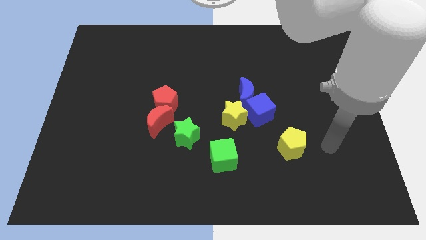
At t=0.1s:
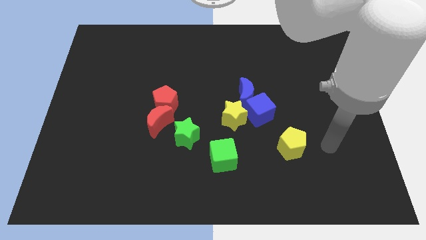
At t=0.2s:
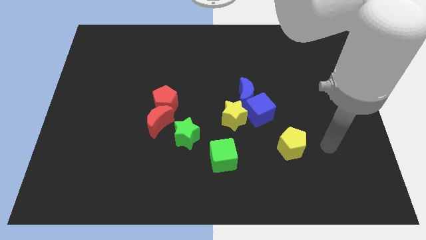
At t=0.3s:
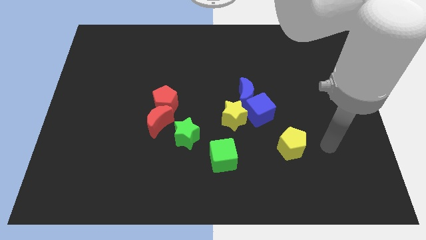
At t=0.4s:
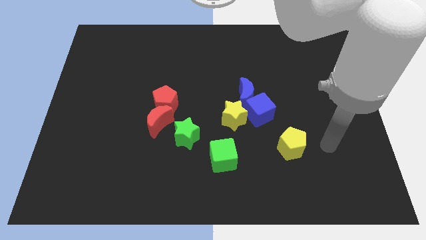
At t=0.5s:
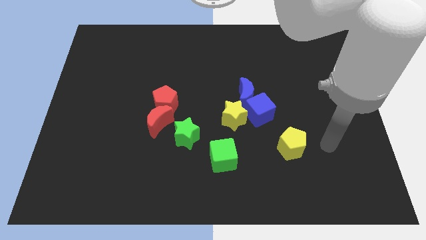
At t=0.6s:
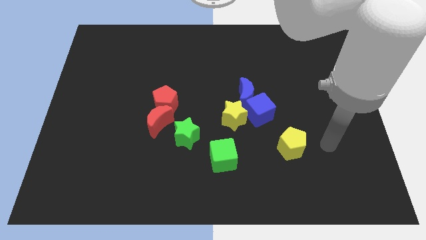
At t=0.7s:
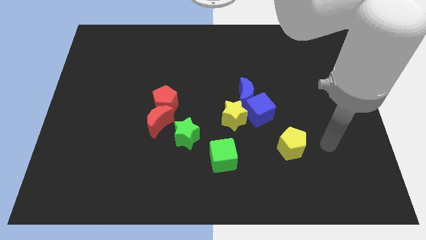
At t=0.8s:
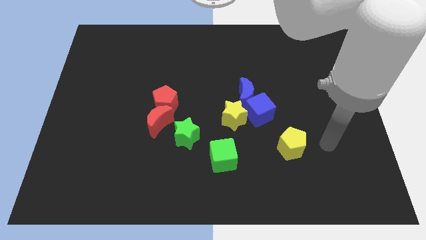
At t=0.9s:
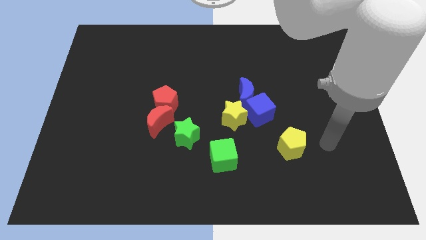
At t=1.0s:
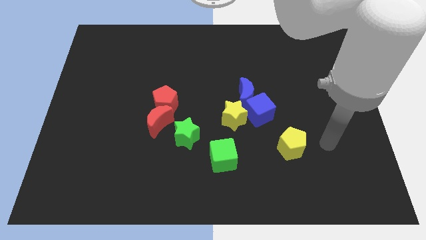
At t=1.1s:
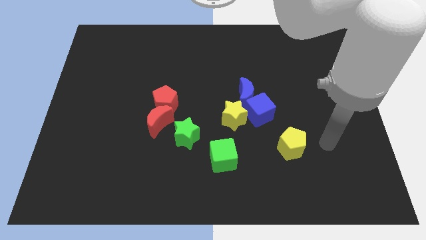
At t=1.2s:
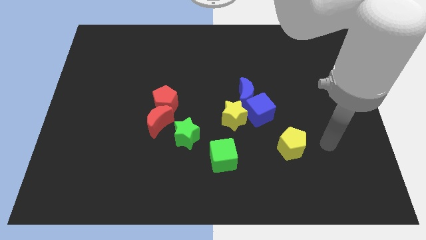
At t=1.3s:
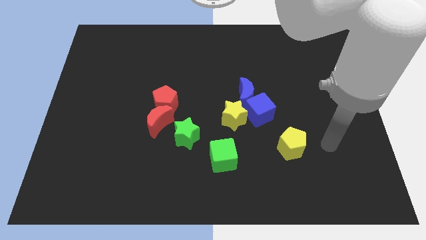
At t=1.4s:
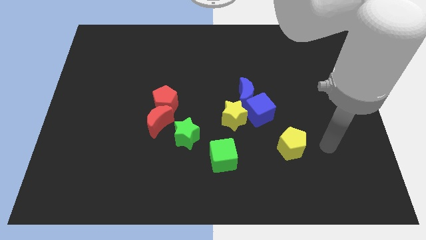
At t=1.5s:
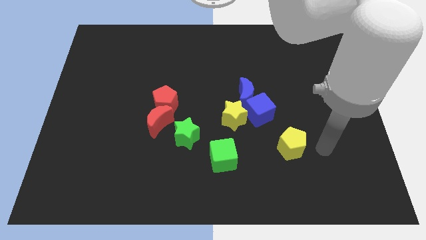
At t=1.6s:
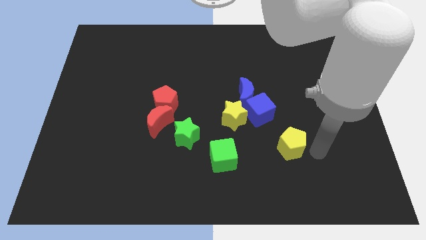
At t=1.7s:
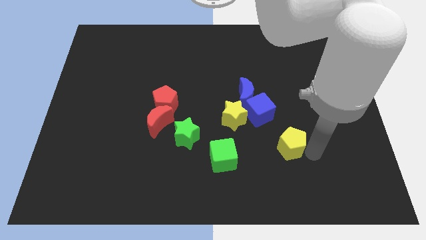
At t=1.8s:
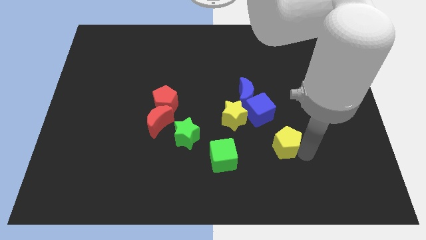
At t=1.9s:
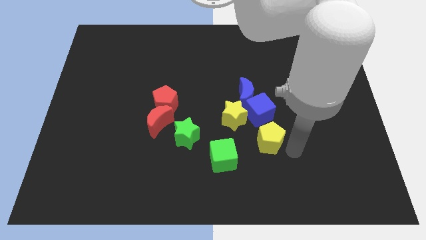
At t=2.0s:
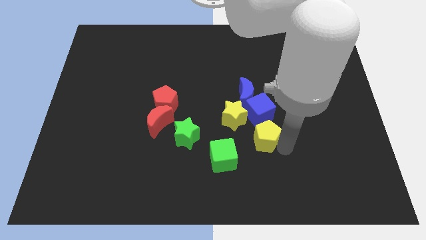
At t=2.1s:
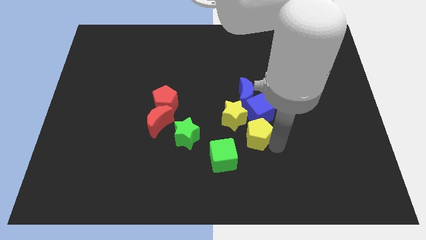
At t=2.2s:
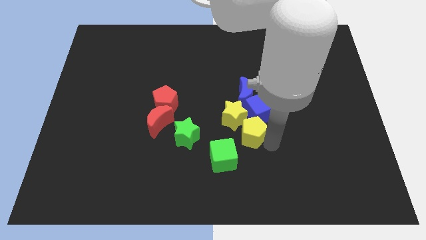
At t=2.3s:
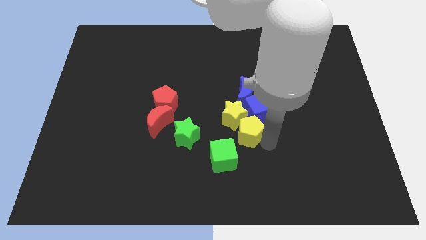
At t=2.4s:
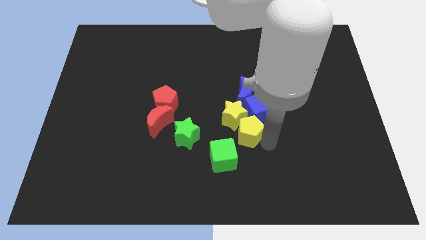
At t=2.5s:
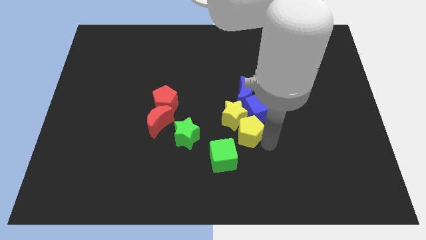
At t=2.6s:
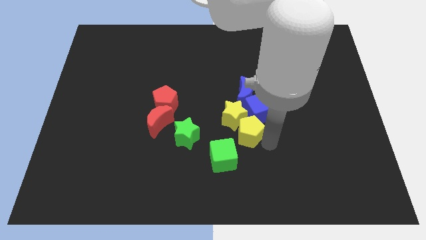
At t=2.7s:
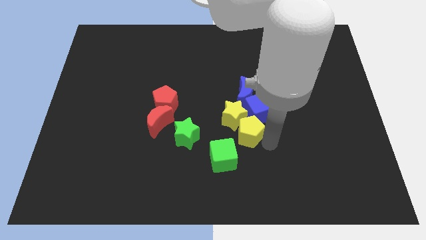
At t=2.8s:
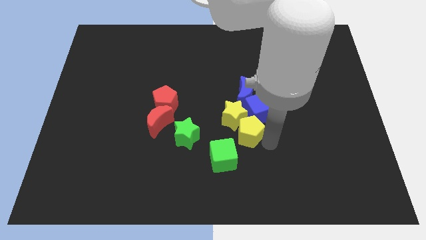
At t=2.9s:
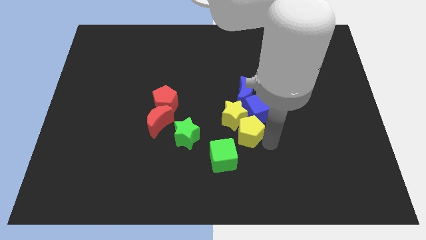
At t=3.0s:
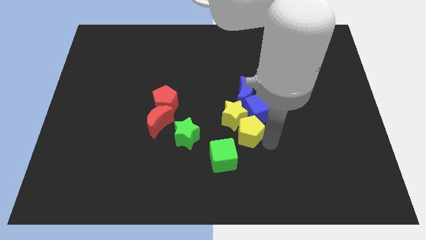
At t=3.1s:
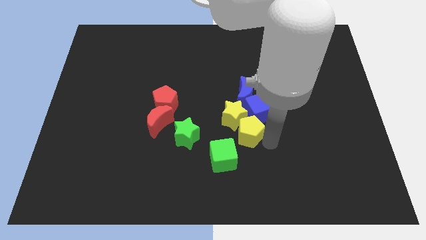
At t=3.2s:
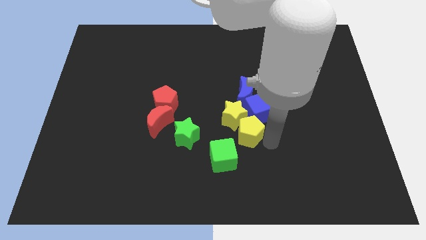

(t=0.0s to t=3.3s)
put the yellow pentagon parallel to the green star

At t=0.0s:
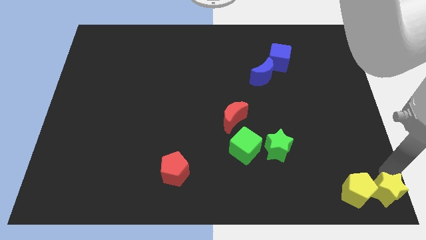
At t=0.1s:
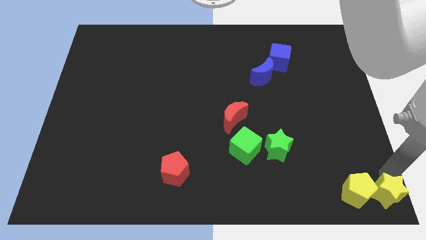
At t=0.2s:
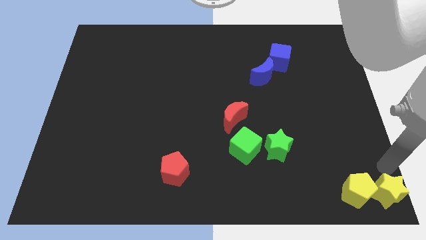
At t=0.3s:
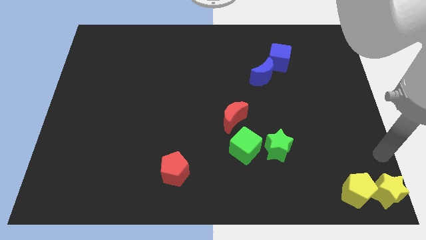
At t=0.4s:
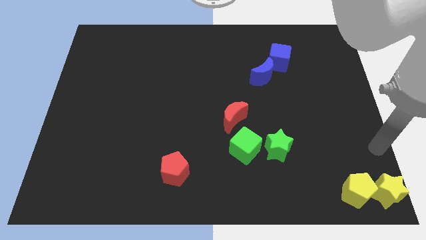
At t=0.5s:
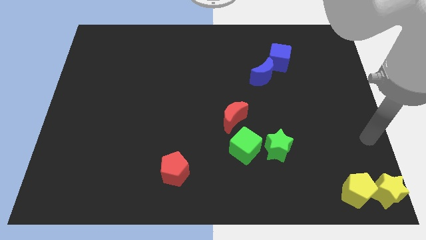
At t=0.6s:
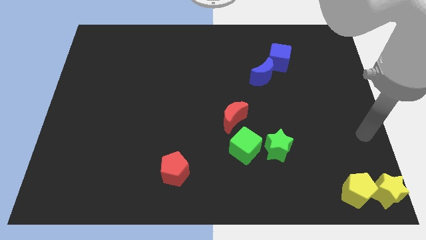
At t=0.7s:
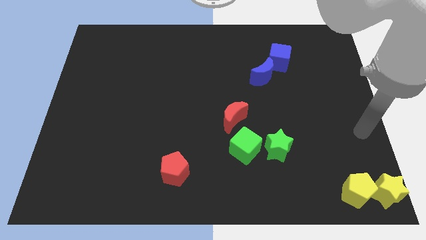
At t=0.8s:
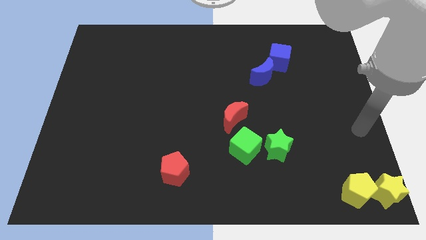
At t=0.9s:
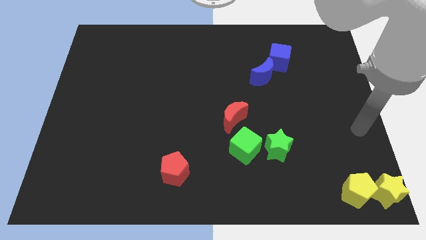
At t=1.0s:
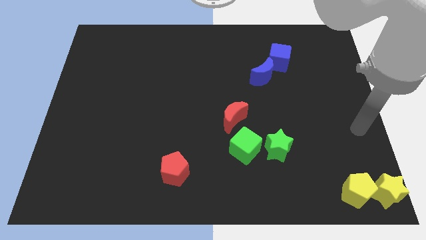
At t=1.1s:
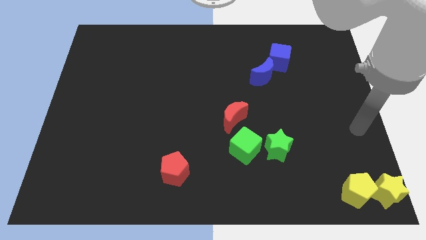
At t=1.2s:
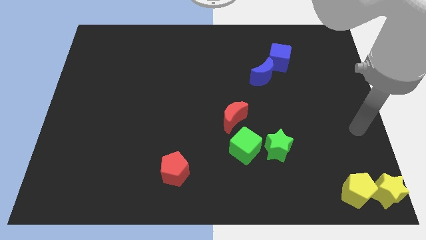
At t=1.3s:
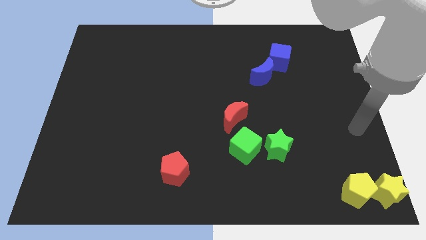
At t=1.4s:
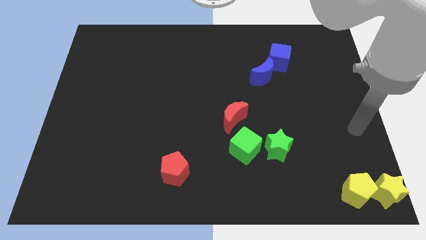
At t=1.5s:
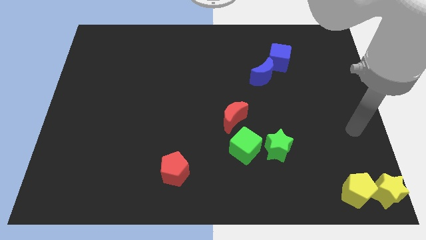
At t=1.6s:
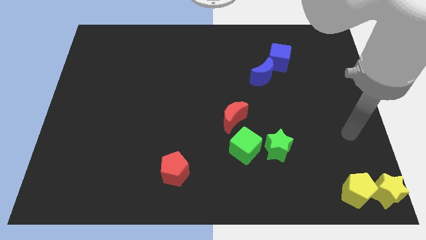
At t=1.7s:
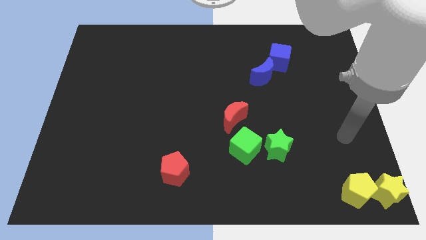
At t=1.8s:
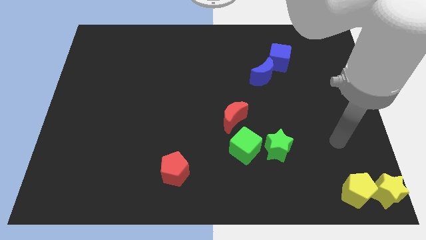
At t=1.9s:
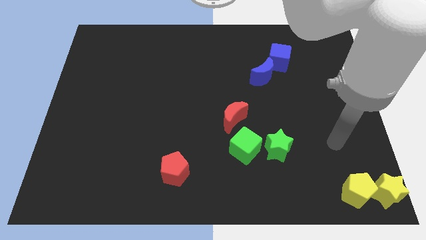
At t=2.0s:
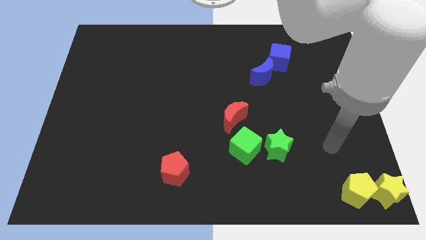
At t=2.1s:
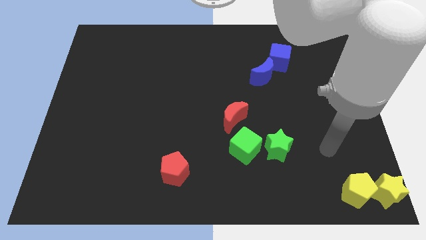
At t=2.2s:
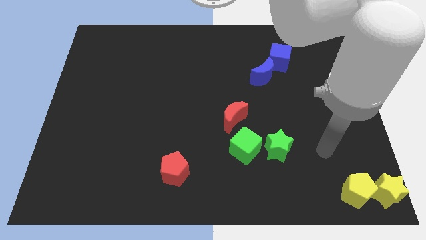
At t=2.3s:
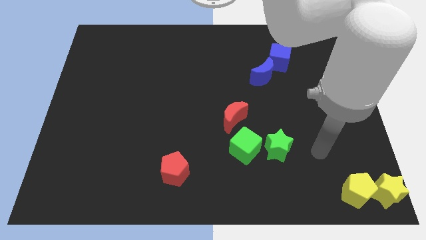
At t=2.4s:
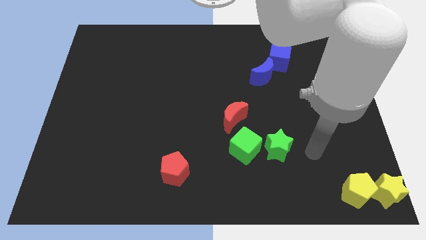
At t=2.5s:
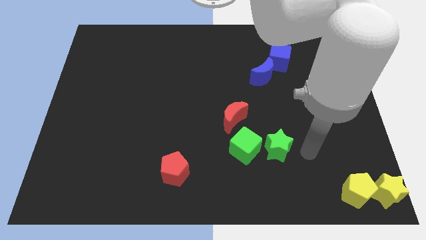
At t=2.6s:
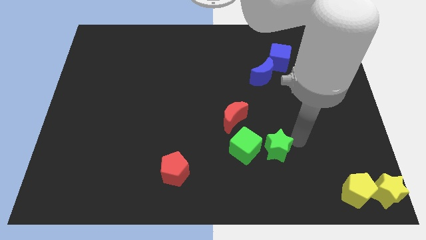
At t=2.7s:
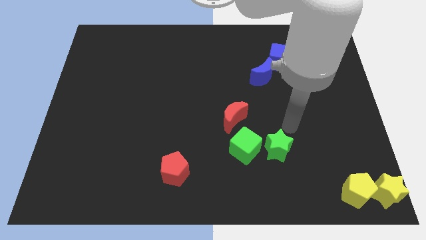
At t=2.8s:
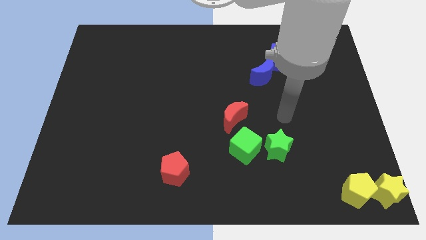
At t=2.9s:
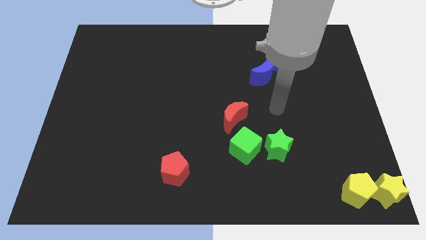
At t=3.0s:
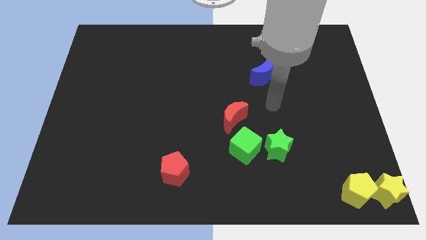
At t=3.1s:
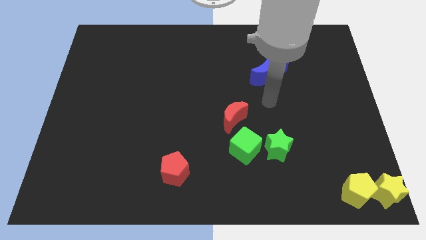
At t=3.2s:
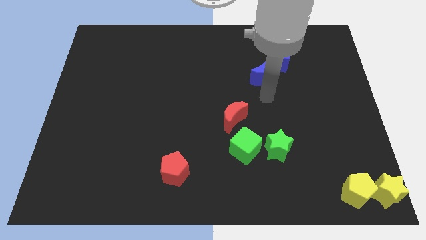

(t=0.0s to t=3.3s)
place the arm at the bottom of blue moon

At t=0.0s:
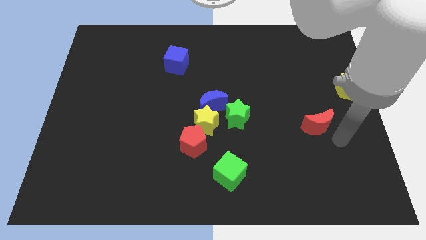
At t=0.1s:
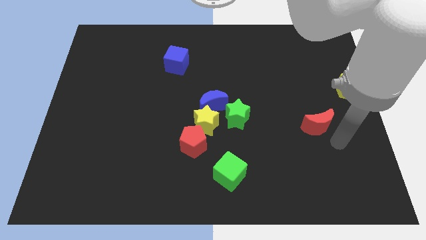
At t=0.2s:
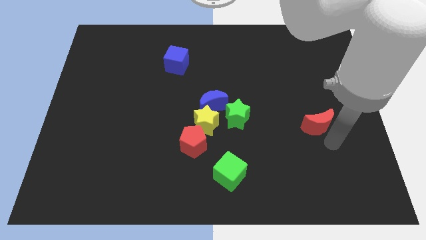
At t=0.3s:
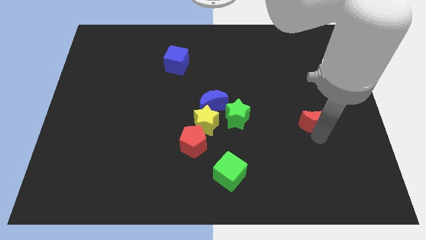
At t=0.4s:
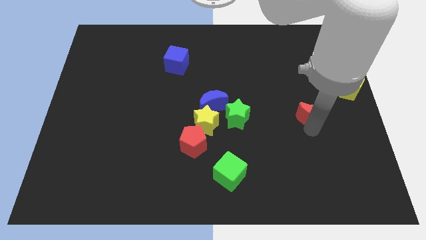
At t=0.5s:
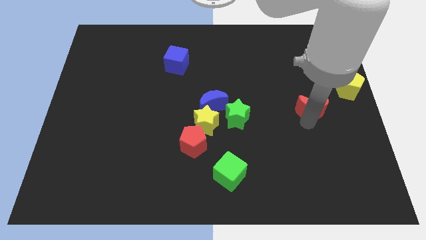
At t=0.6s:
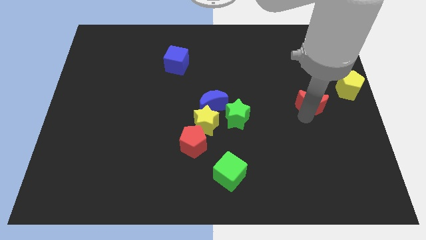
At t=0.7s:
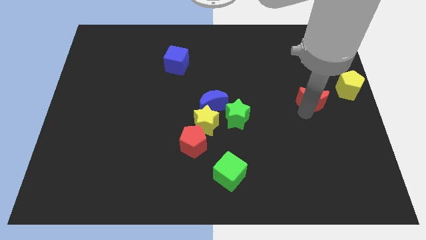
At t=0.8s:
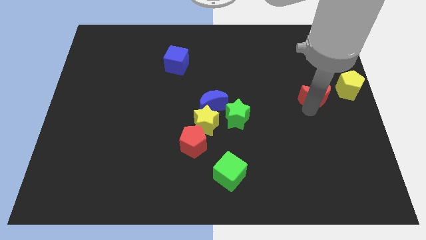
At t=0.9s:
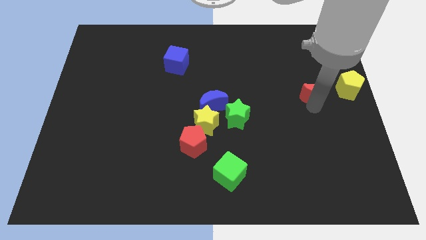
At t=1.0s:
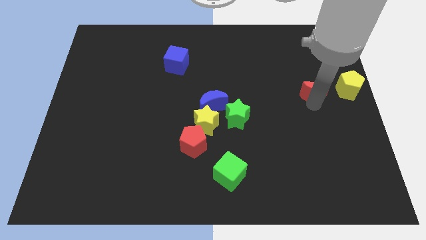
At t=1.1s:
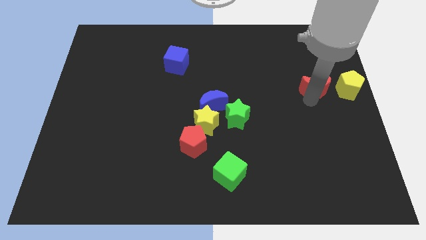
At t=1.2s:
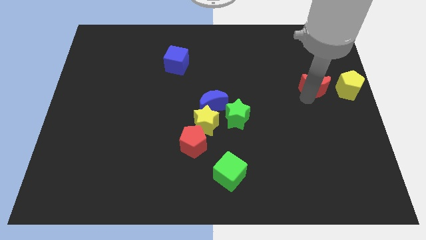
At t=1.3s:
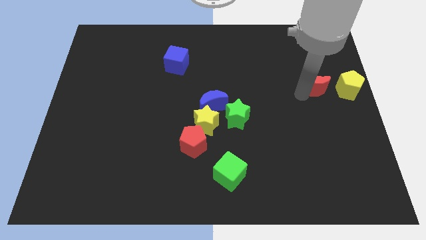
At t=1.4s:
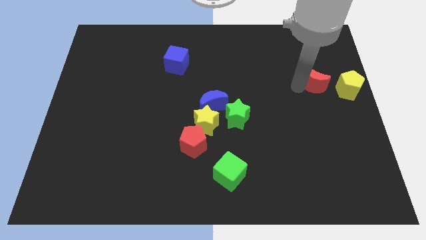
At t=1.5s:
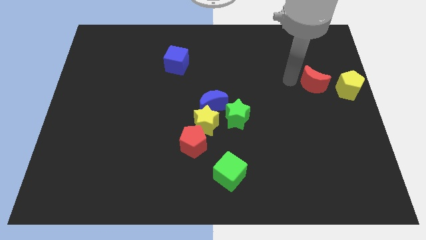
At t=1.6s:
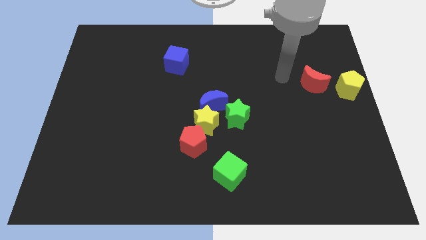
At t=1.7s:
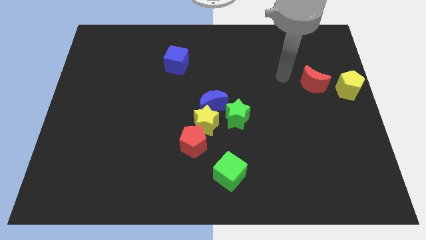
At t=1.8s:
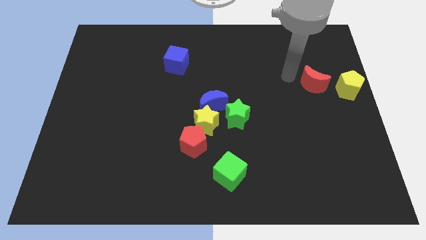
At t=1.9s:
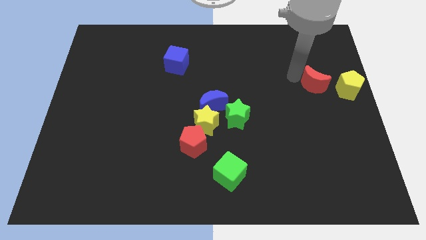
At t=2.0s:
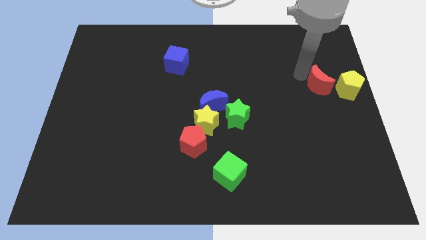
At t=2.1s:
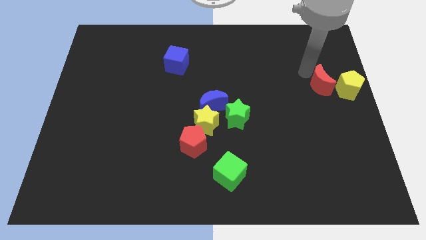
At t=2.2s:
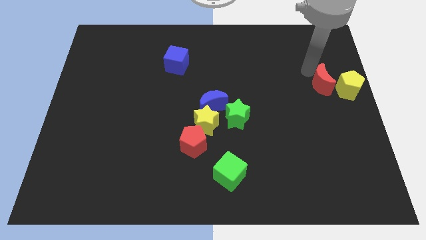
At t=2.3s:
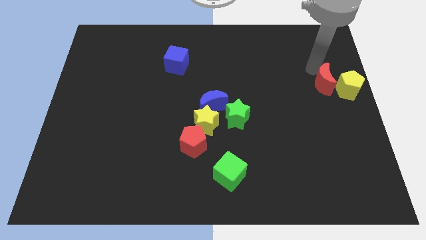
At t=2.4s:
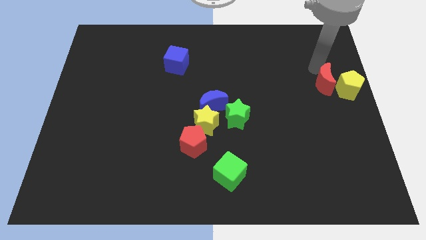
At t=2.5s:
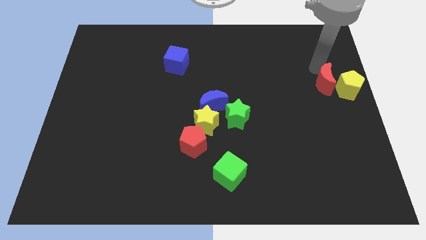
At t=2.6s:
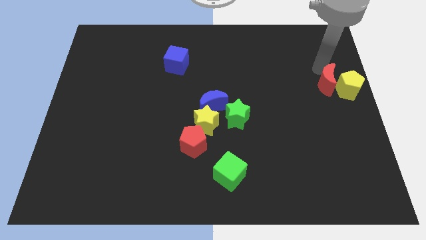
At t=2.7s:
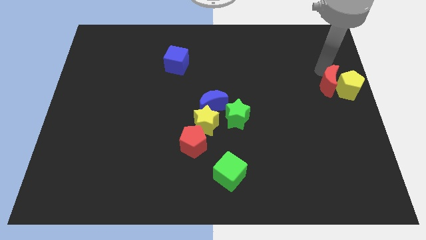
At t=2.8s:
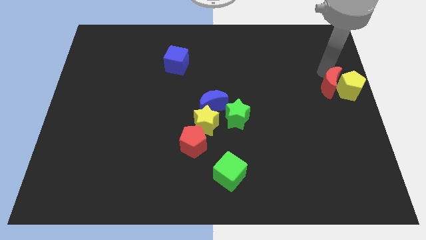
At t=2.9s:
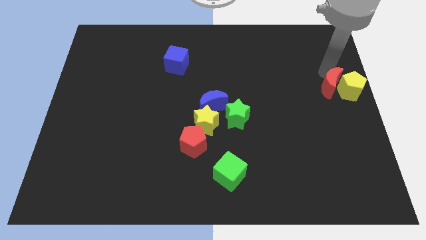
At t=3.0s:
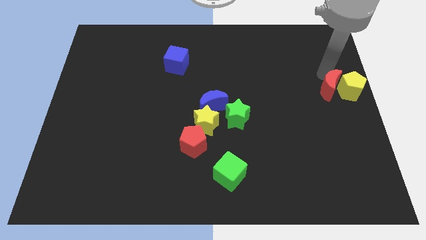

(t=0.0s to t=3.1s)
push the red crescent into yellow pentagon
